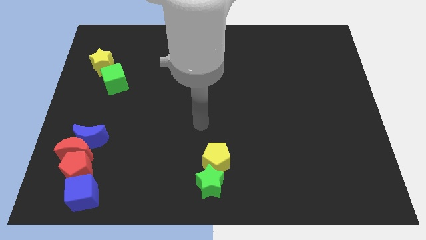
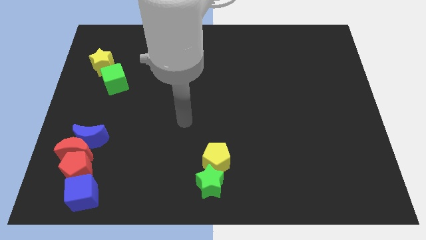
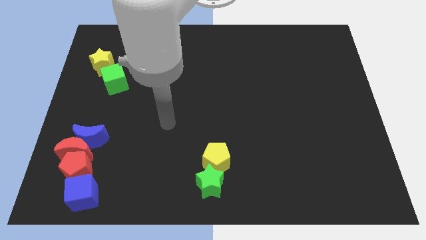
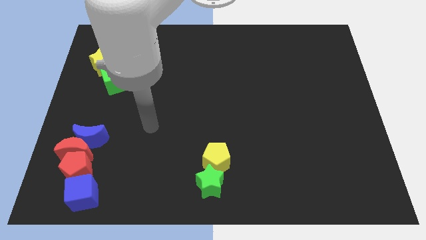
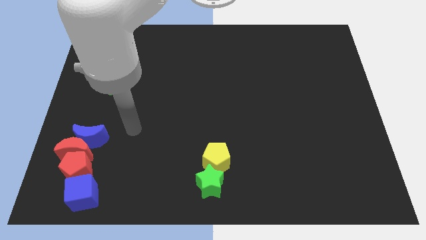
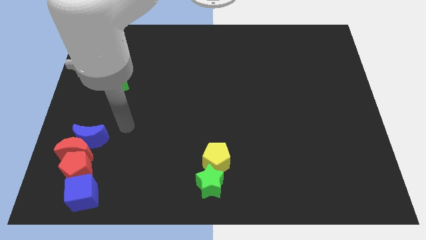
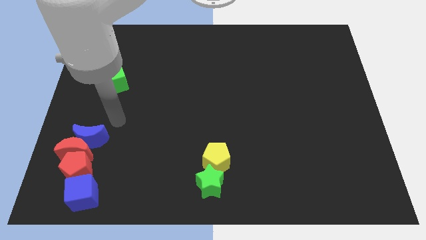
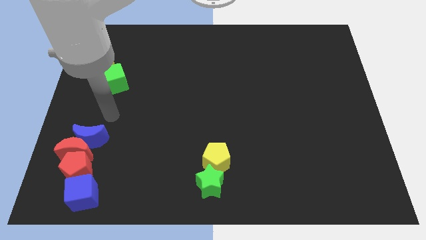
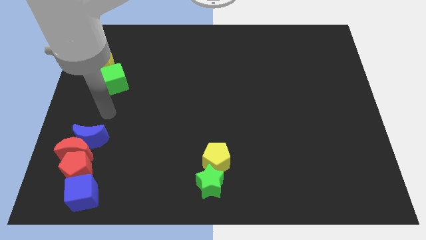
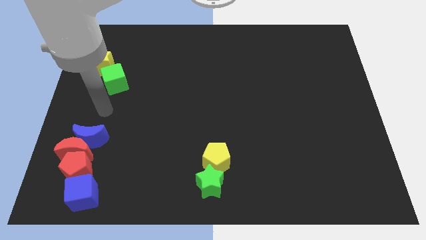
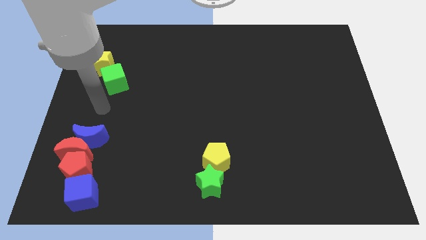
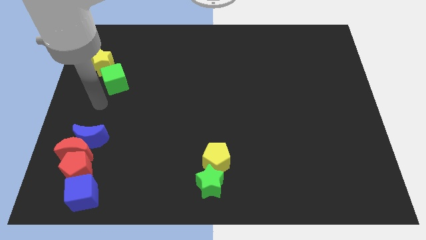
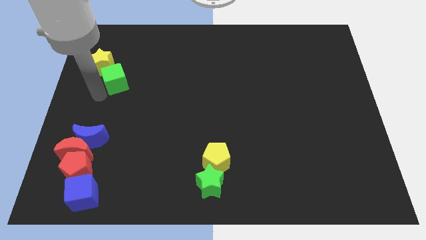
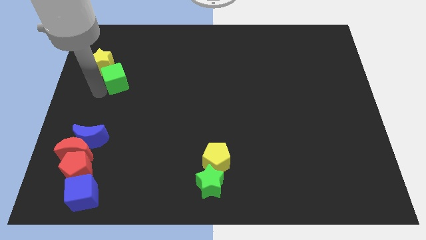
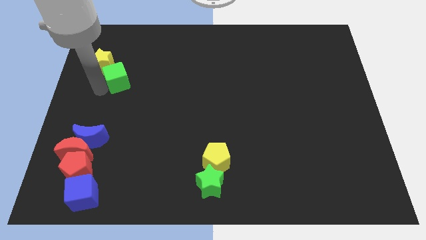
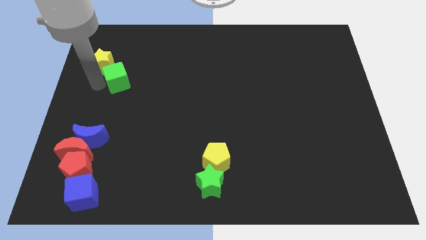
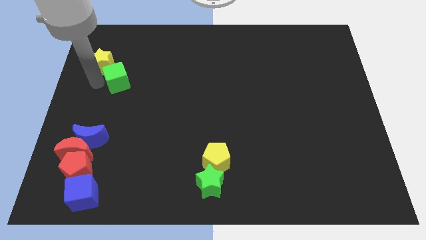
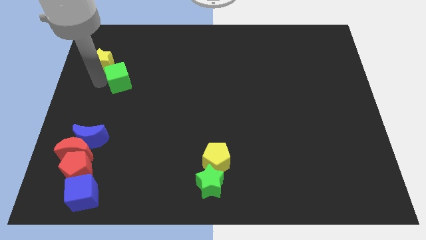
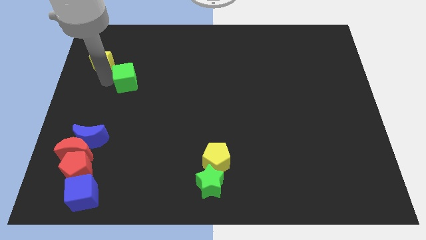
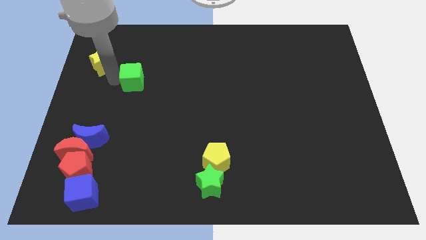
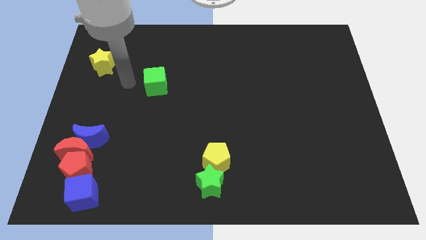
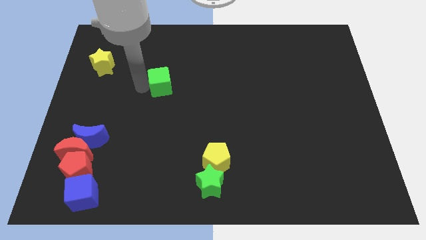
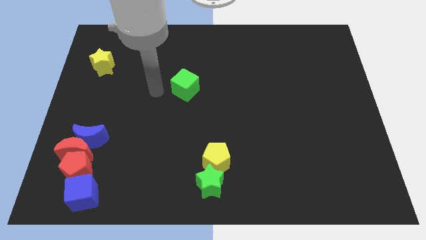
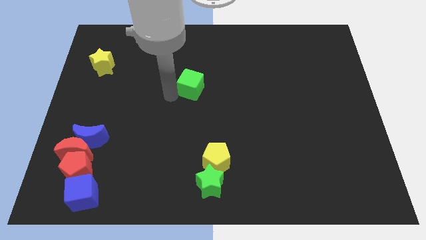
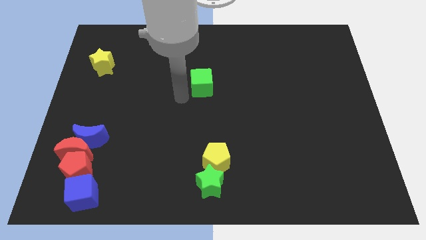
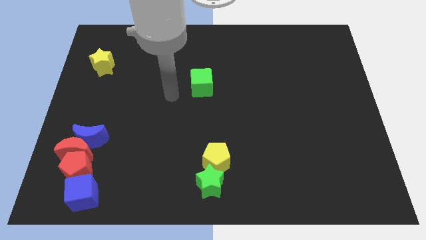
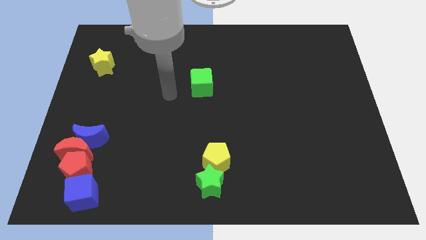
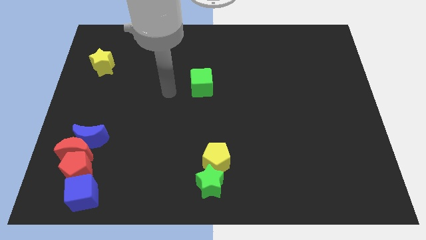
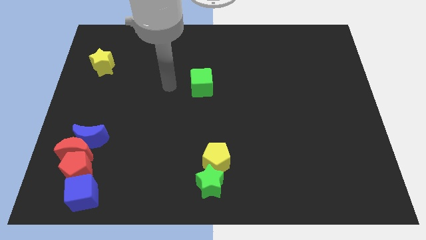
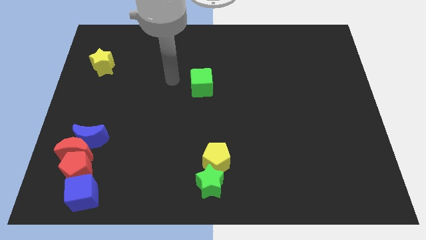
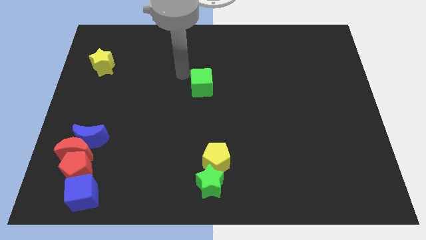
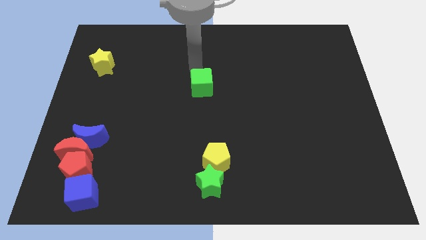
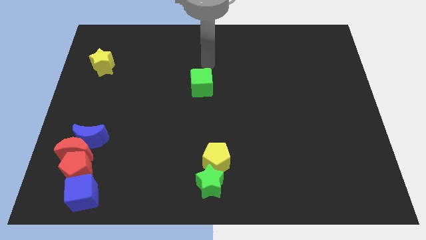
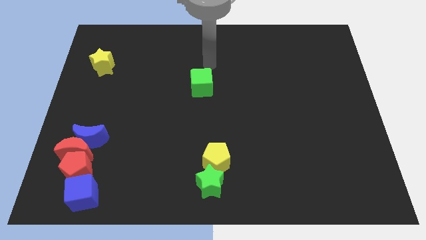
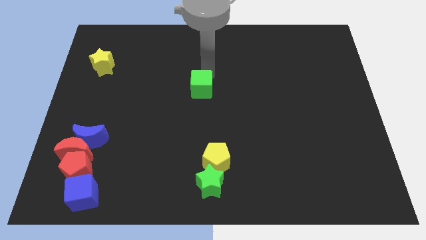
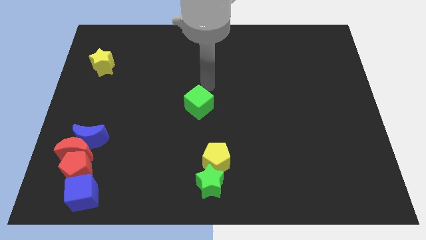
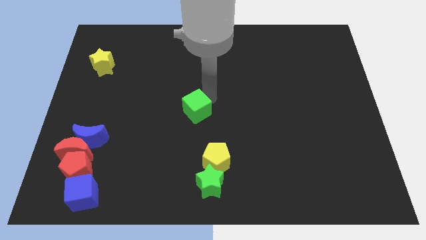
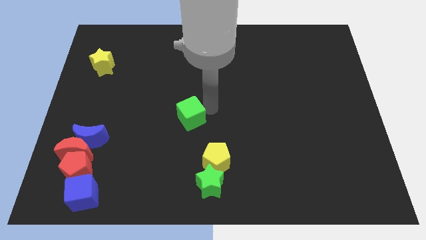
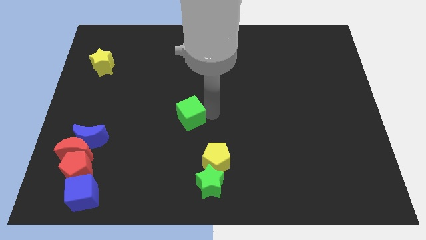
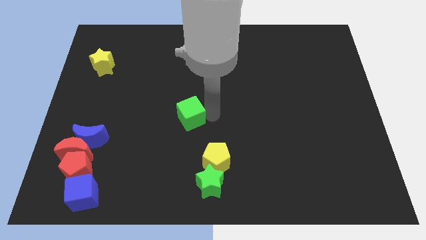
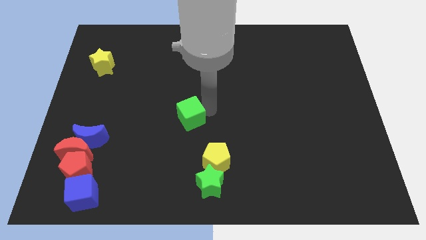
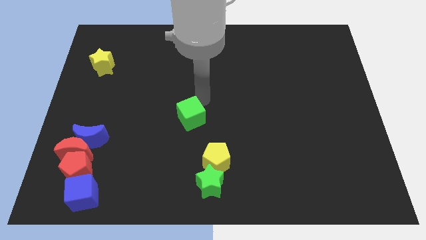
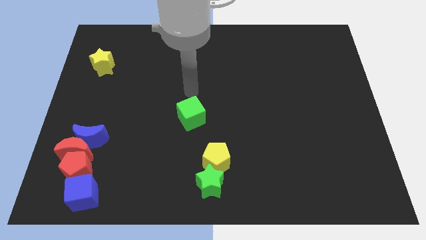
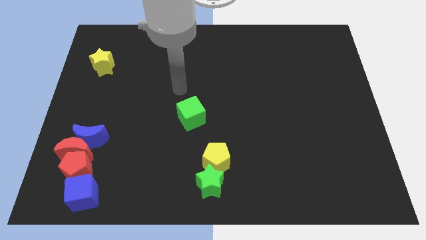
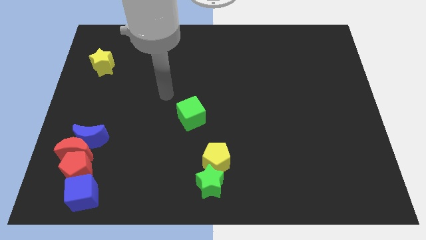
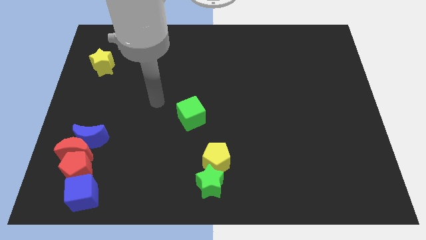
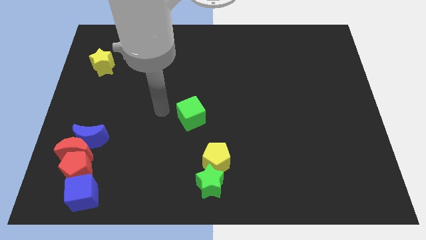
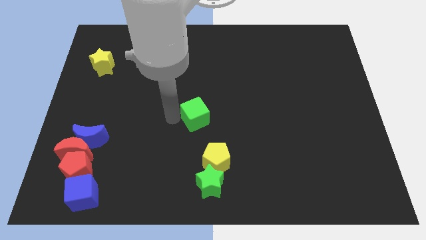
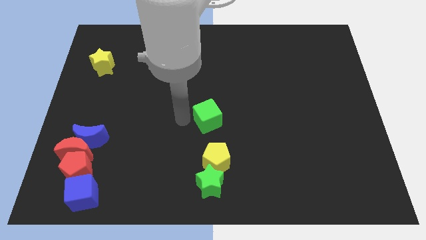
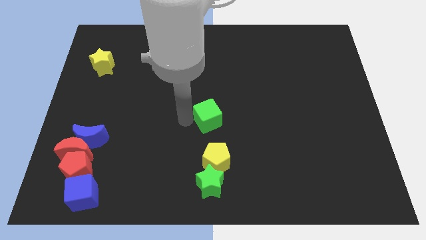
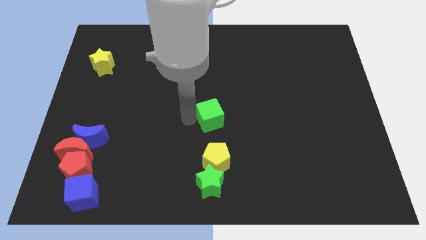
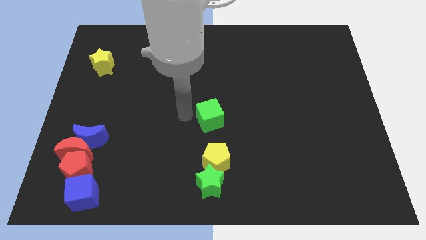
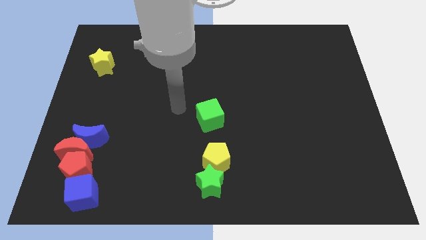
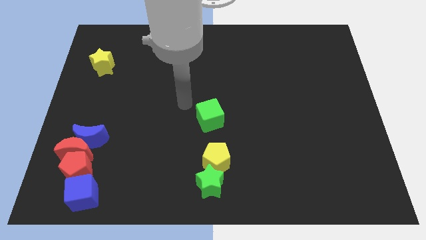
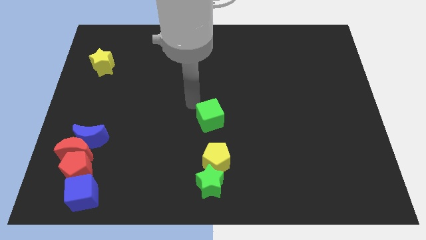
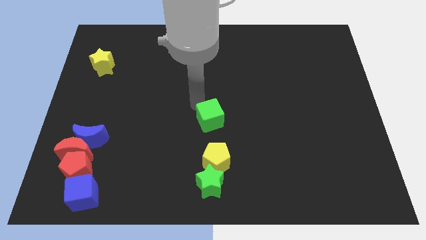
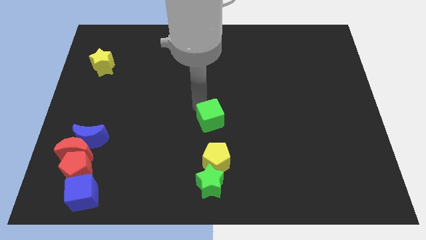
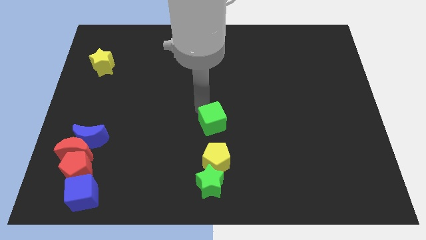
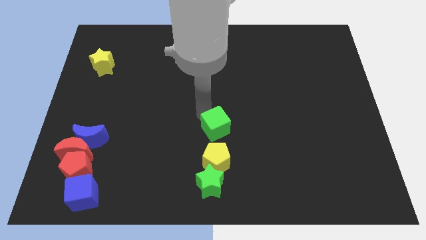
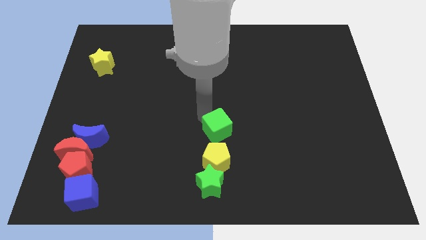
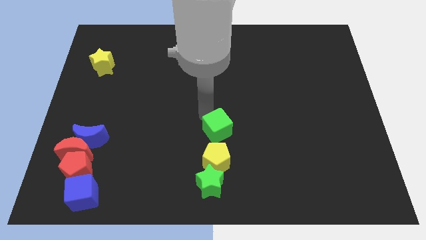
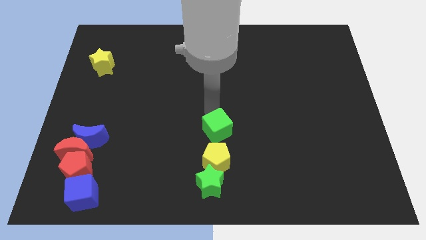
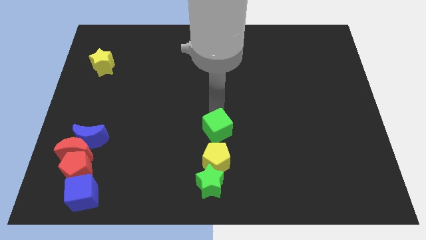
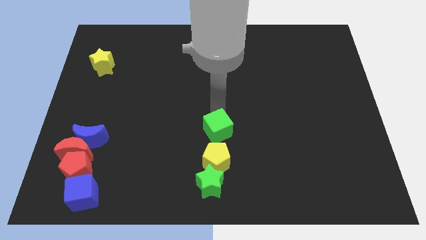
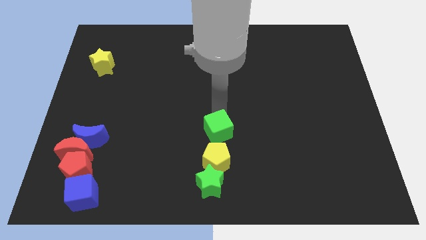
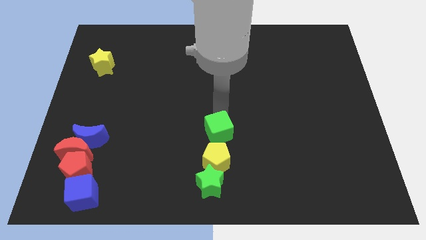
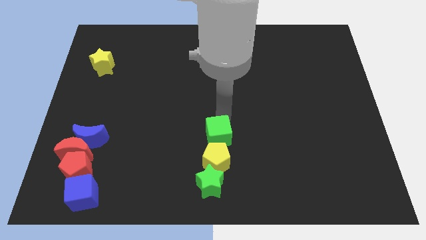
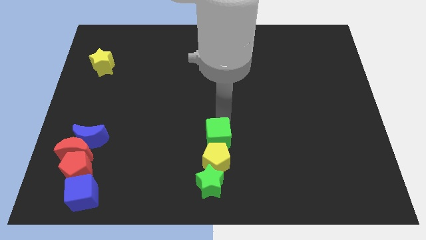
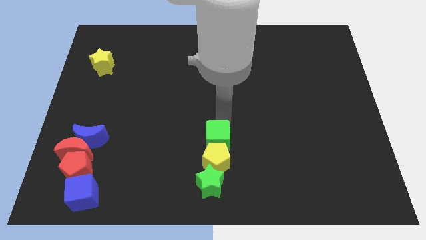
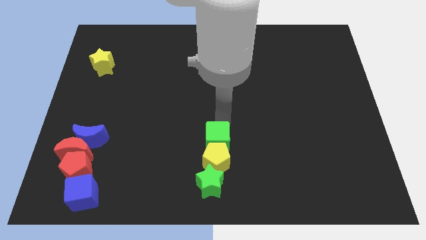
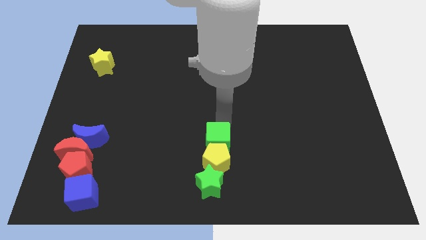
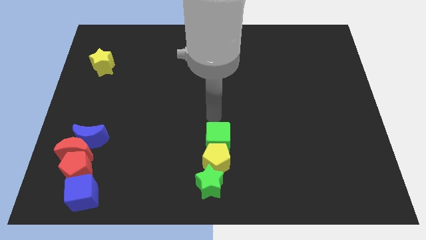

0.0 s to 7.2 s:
push the green cube towards the yellow pentagon

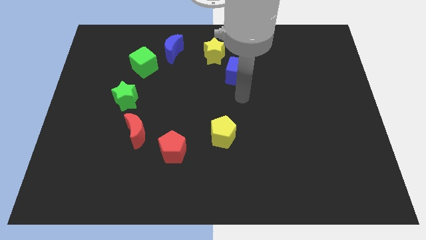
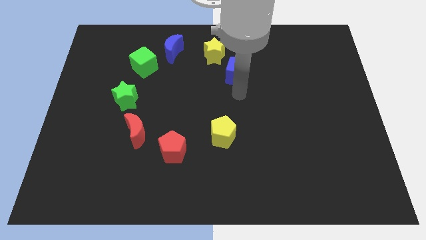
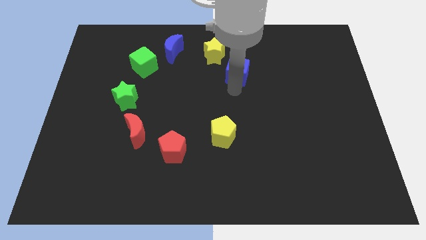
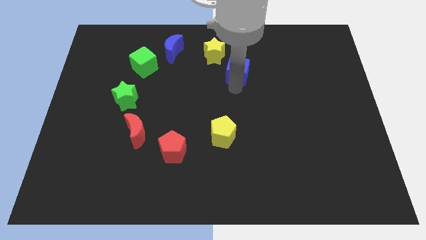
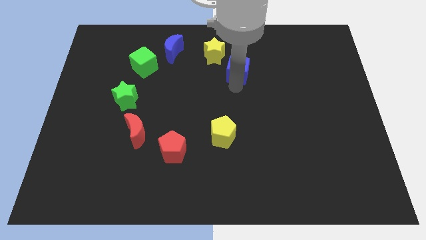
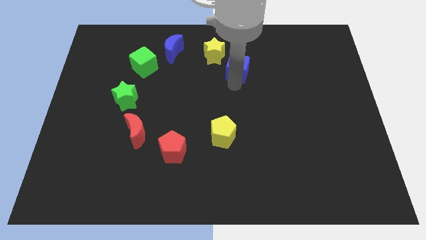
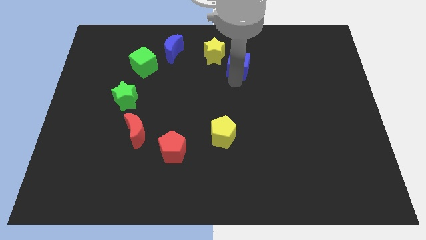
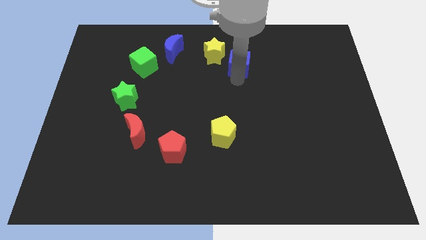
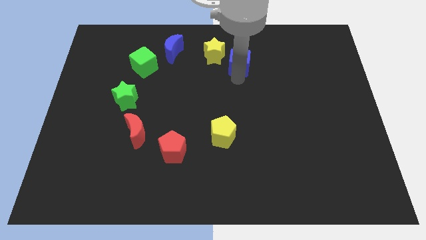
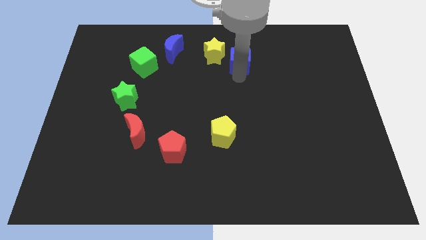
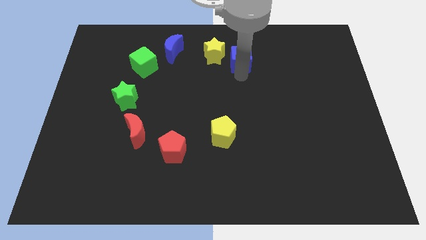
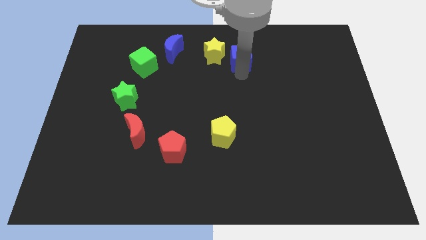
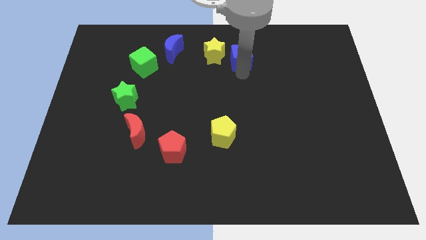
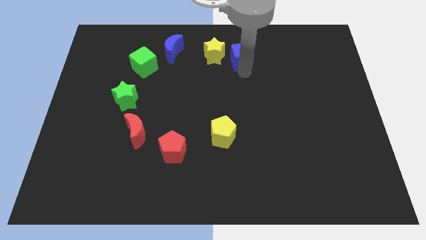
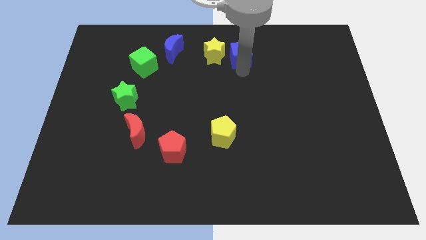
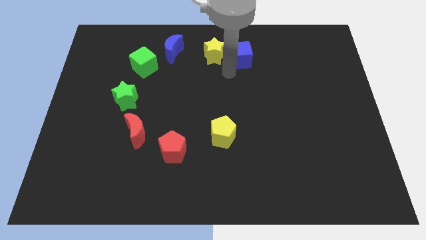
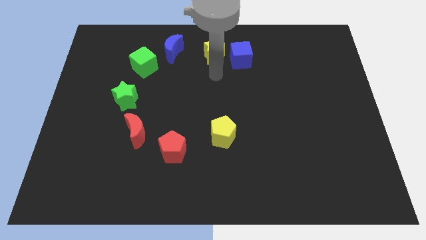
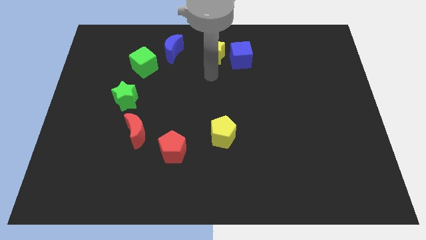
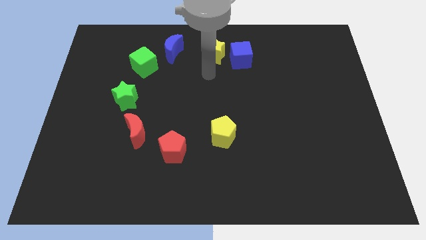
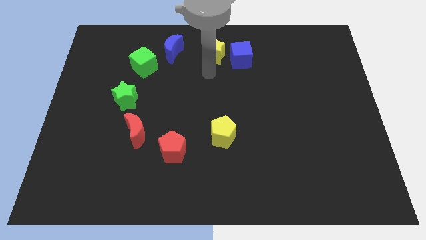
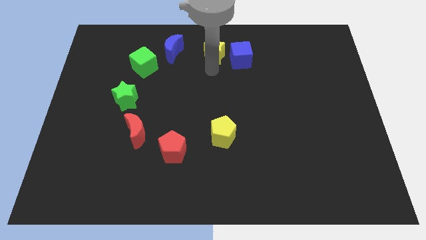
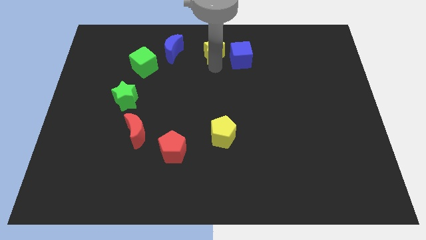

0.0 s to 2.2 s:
place blue cube to the right of yellow star
